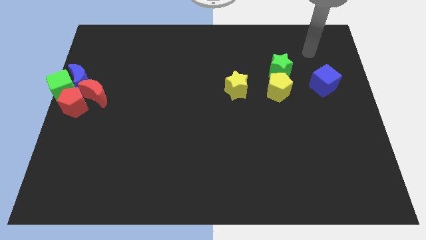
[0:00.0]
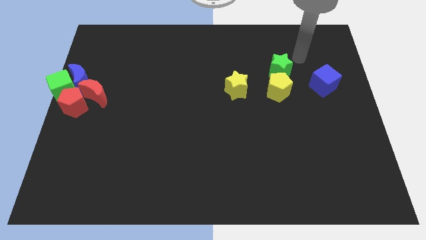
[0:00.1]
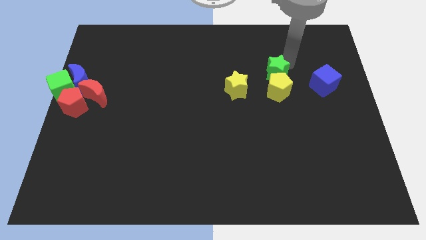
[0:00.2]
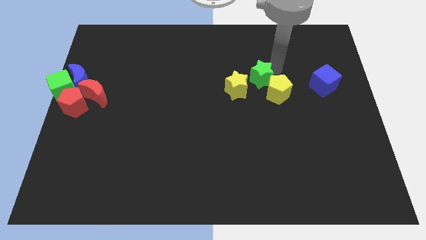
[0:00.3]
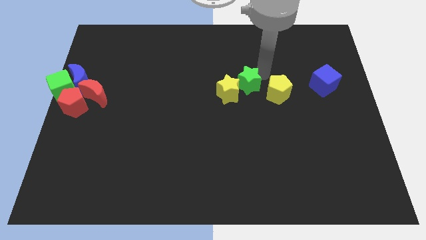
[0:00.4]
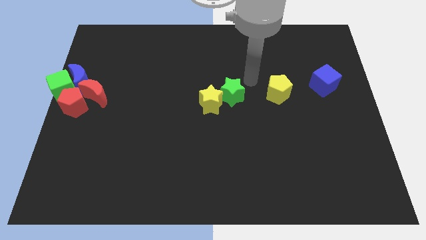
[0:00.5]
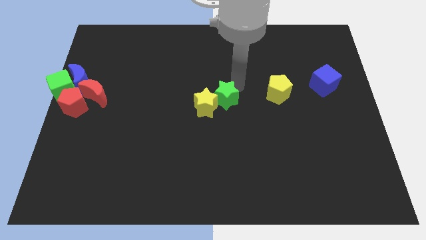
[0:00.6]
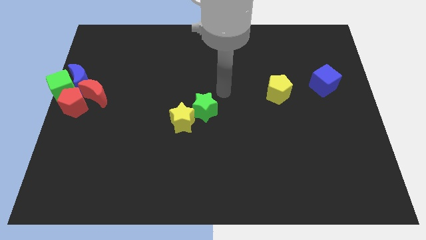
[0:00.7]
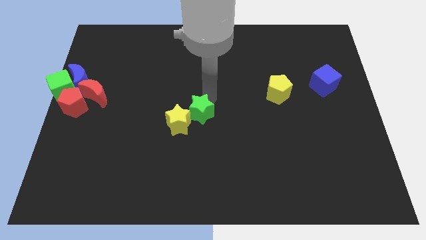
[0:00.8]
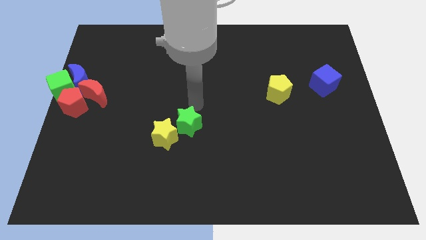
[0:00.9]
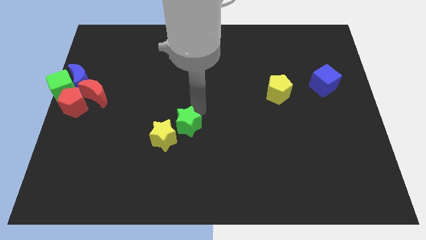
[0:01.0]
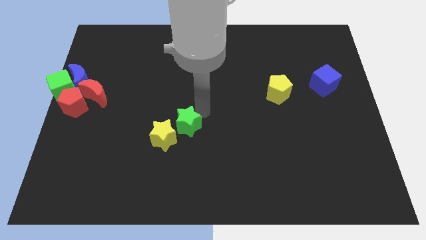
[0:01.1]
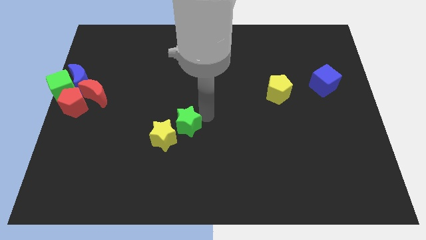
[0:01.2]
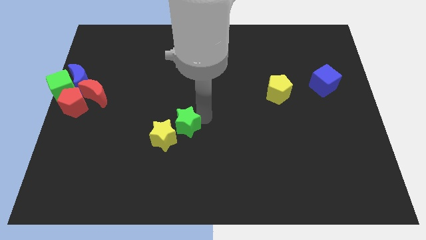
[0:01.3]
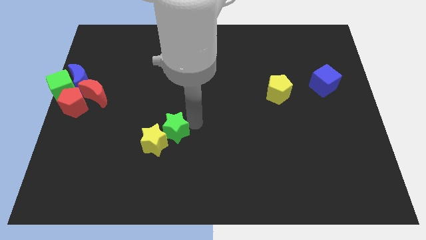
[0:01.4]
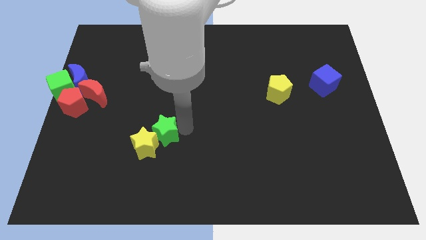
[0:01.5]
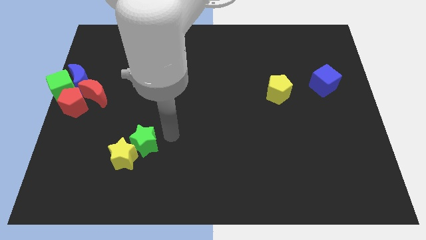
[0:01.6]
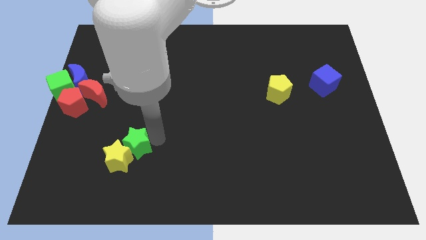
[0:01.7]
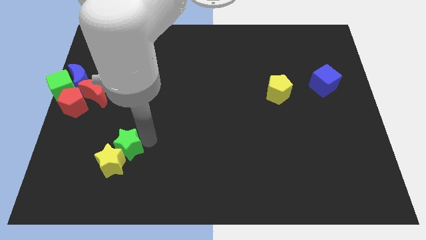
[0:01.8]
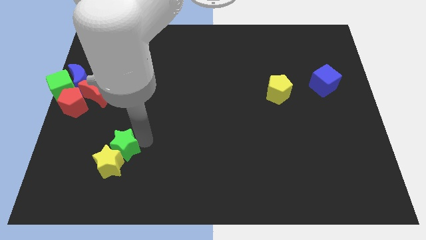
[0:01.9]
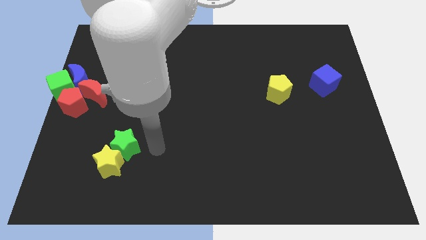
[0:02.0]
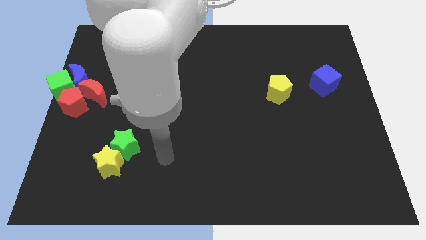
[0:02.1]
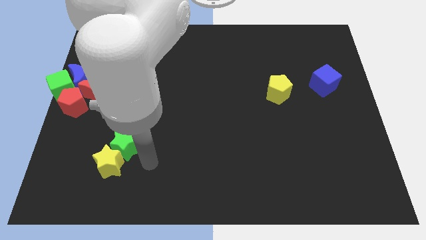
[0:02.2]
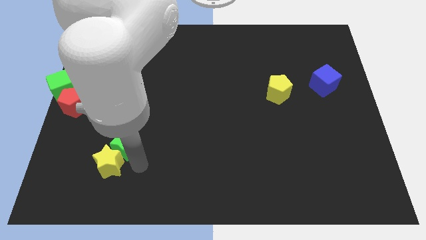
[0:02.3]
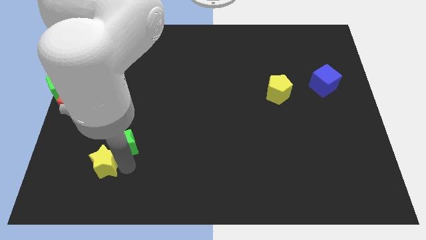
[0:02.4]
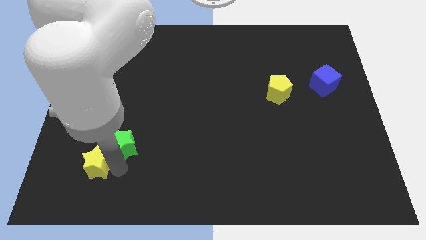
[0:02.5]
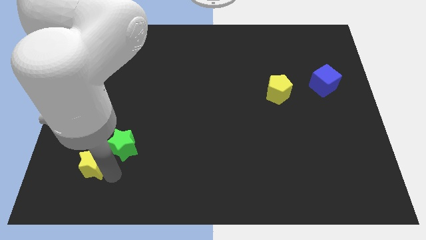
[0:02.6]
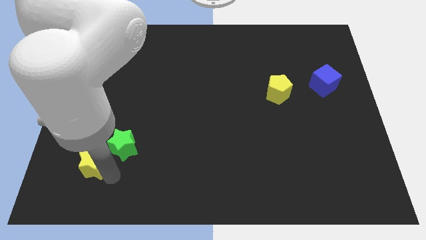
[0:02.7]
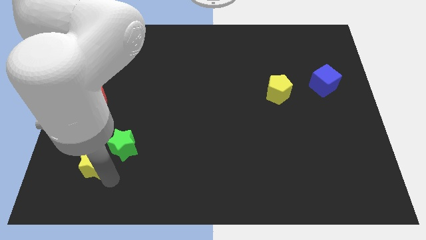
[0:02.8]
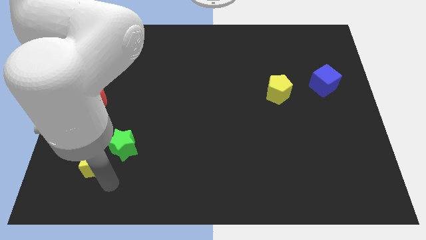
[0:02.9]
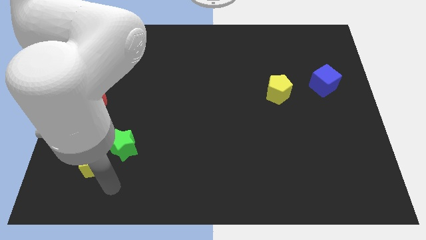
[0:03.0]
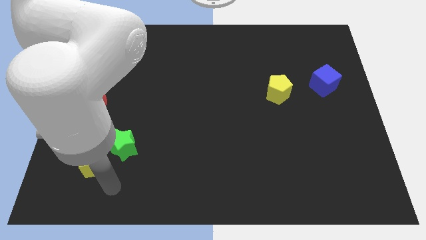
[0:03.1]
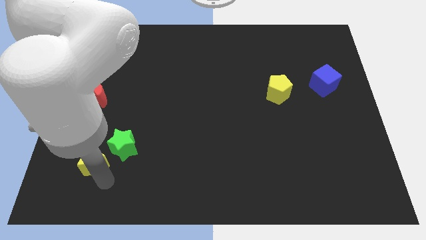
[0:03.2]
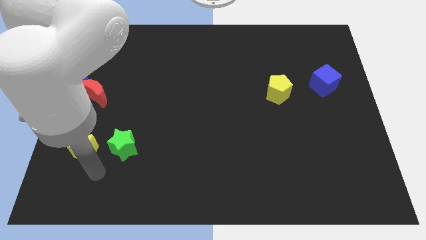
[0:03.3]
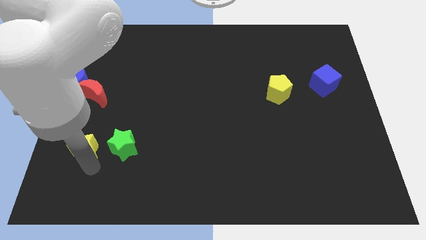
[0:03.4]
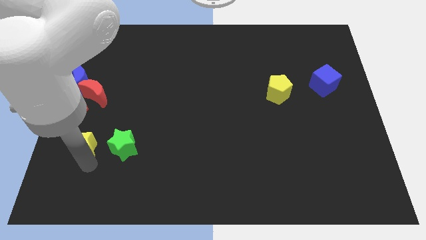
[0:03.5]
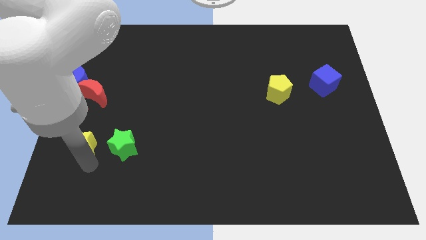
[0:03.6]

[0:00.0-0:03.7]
move the stars to the left bottom

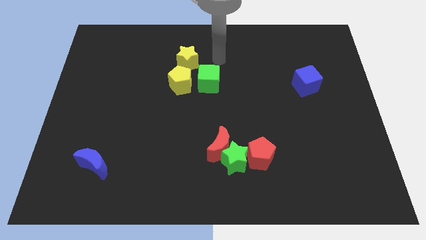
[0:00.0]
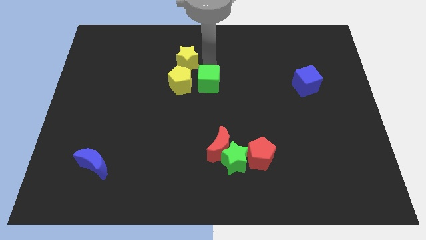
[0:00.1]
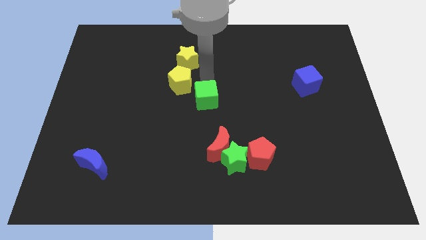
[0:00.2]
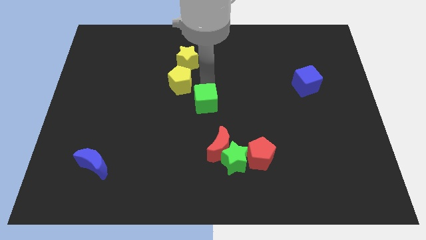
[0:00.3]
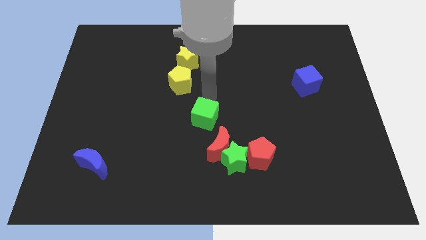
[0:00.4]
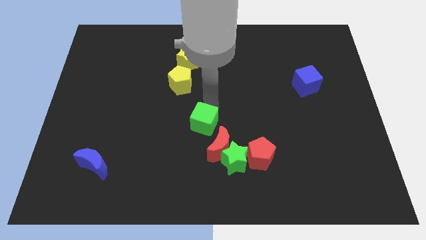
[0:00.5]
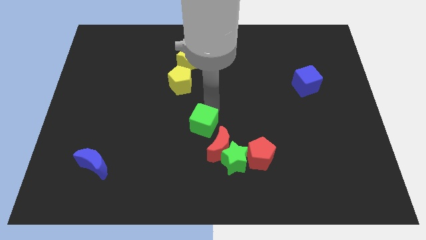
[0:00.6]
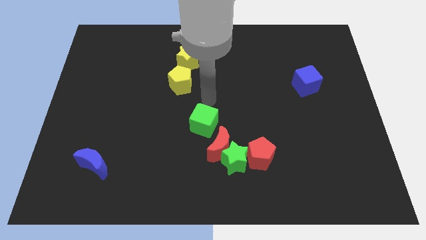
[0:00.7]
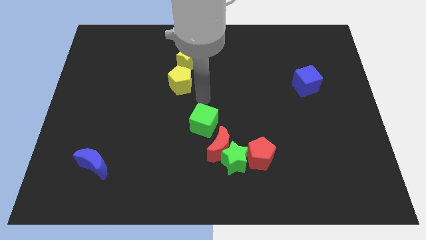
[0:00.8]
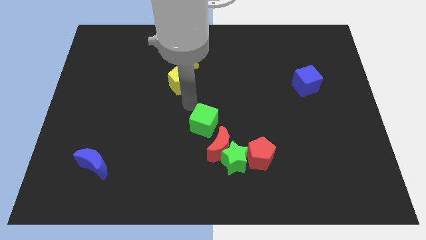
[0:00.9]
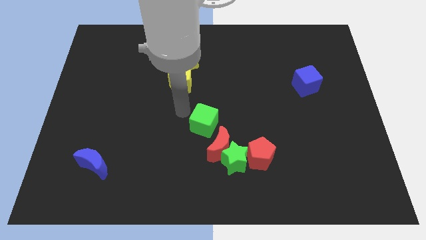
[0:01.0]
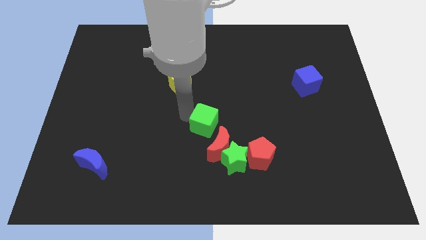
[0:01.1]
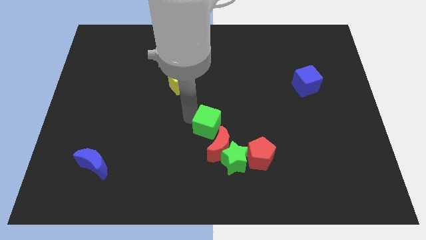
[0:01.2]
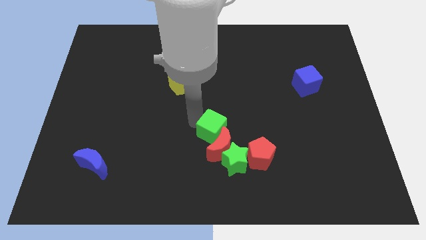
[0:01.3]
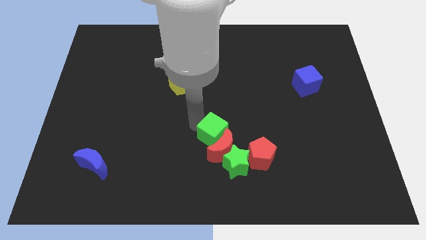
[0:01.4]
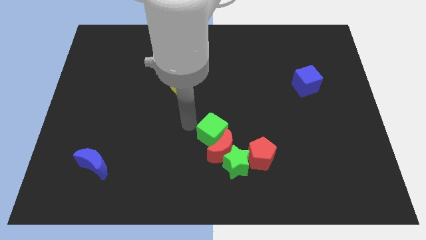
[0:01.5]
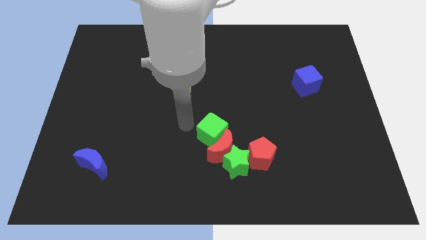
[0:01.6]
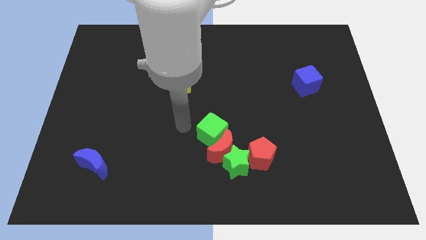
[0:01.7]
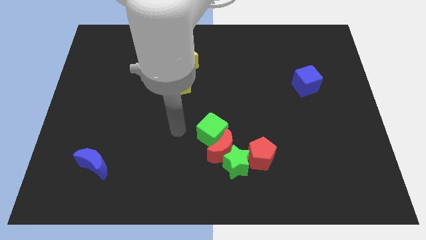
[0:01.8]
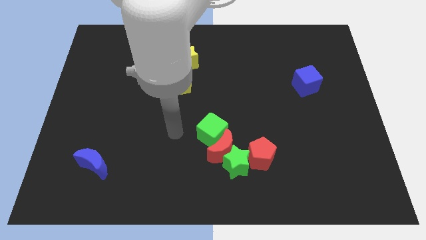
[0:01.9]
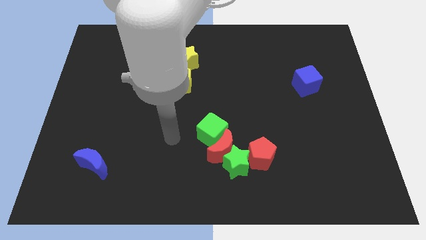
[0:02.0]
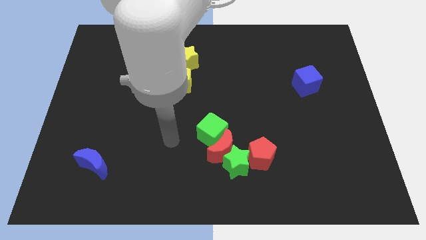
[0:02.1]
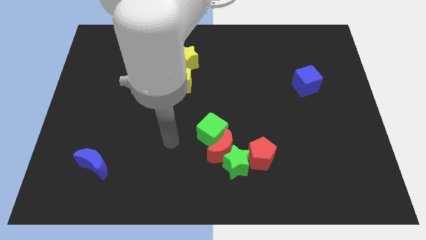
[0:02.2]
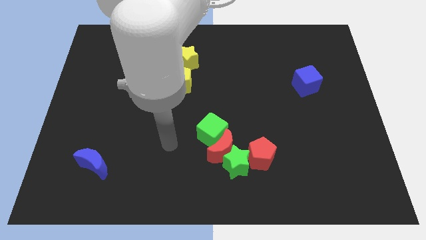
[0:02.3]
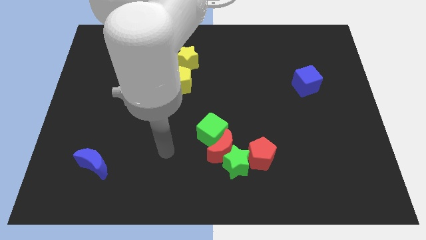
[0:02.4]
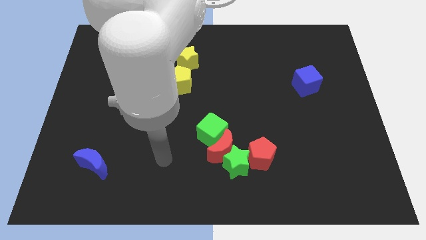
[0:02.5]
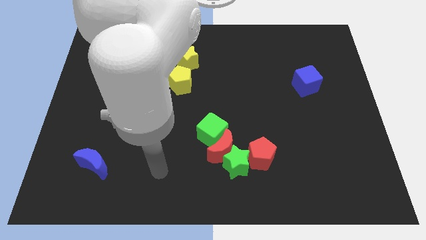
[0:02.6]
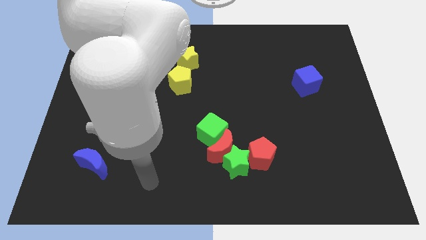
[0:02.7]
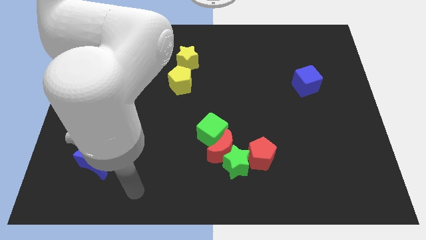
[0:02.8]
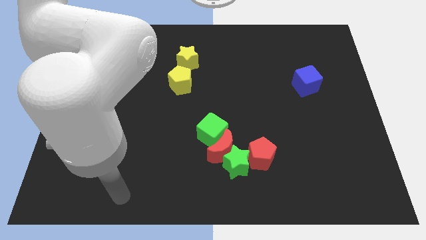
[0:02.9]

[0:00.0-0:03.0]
slide the green cube into the red crescent

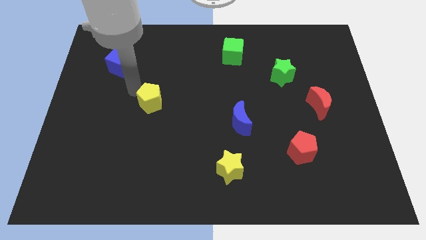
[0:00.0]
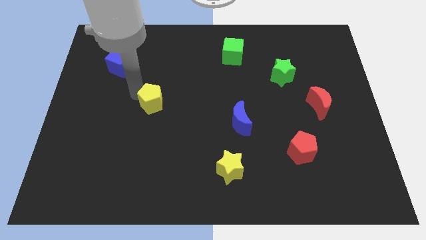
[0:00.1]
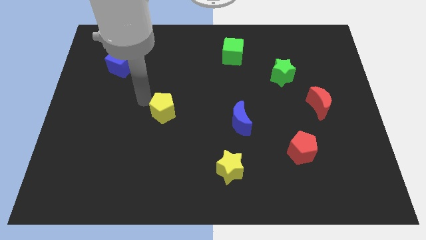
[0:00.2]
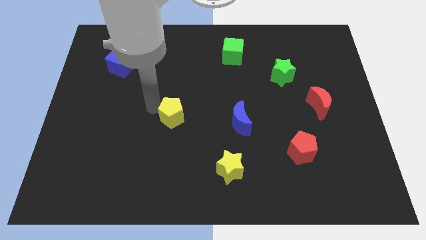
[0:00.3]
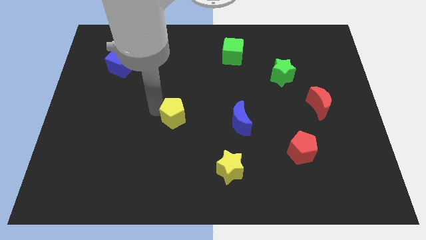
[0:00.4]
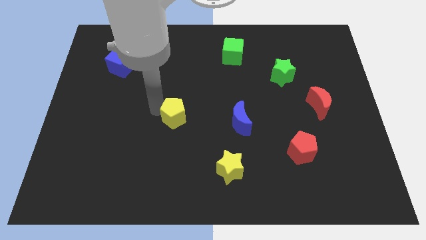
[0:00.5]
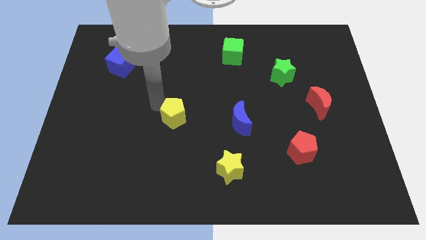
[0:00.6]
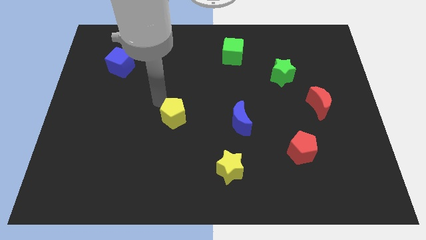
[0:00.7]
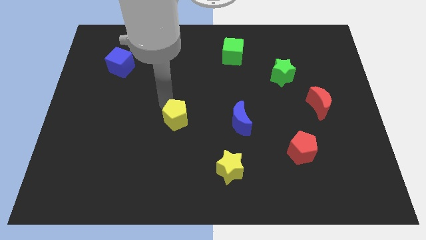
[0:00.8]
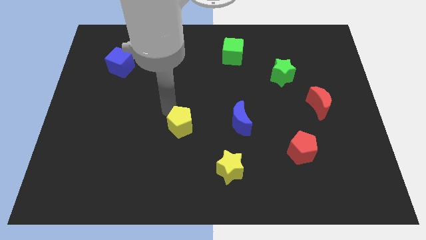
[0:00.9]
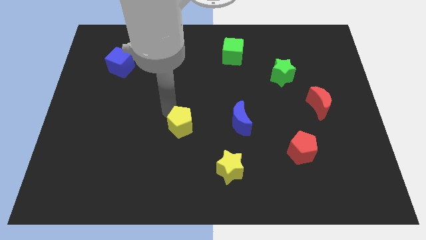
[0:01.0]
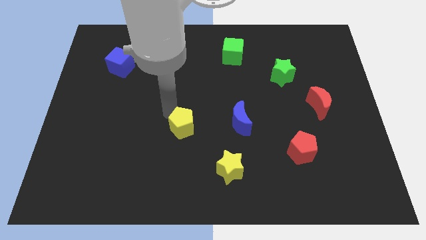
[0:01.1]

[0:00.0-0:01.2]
move the yellow pentagon left to the blue crescent

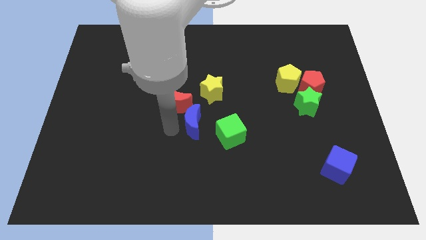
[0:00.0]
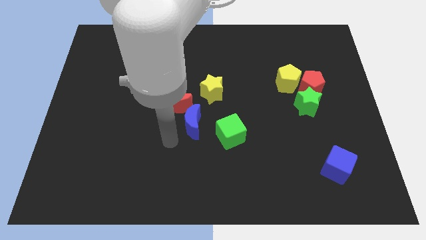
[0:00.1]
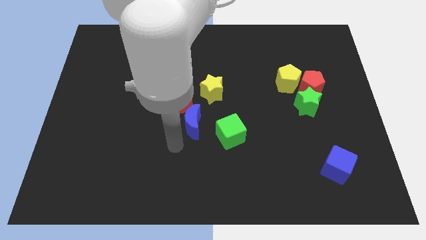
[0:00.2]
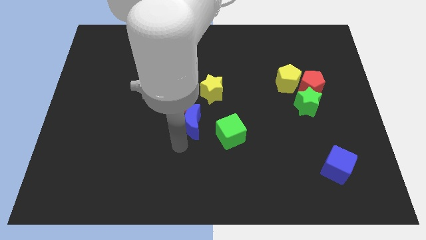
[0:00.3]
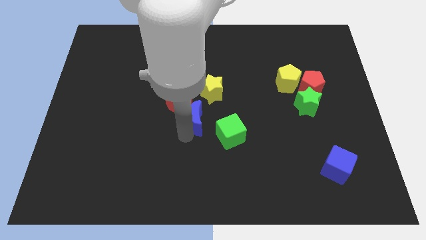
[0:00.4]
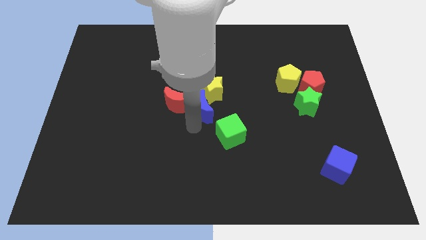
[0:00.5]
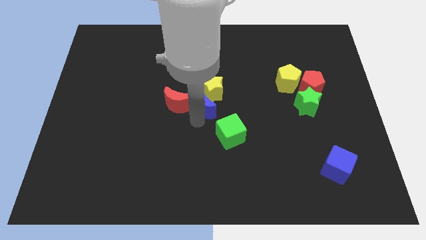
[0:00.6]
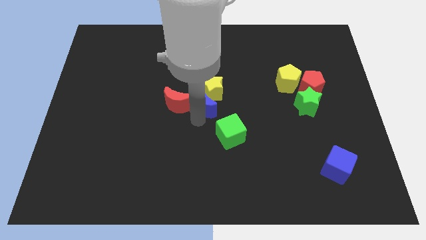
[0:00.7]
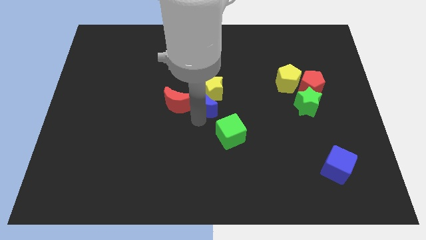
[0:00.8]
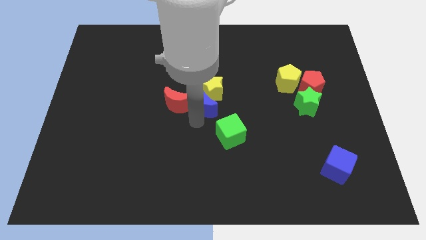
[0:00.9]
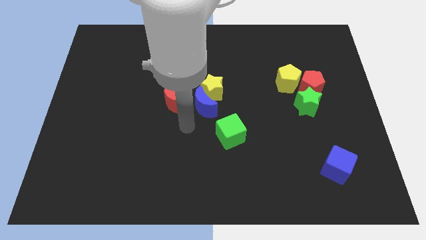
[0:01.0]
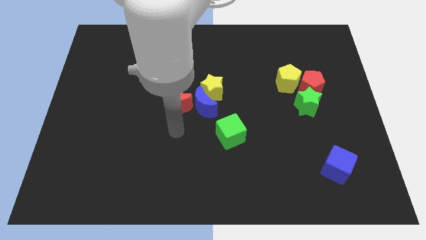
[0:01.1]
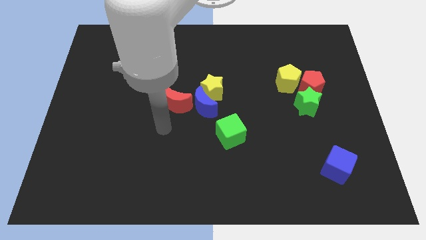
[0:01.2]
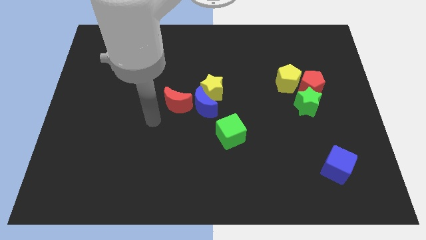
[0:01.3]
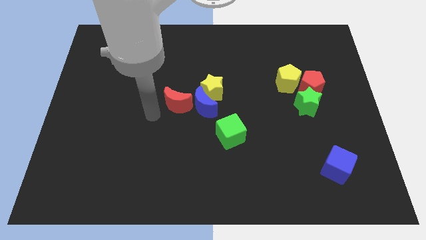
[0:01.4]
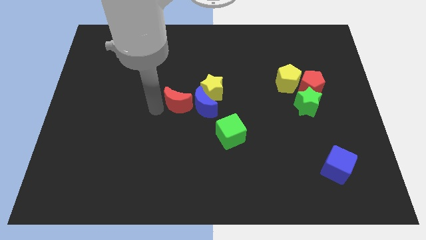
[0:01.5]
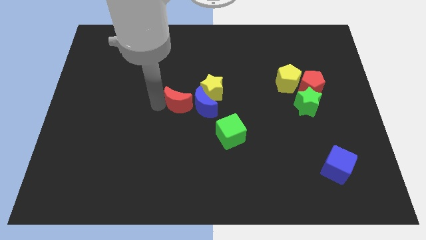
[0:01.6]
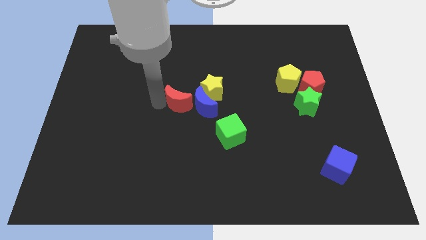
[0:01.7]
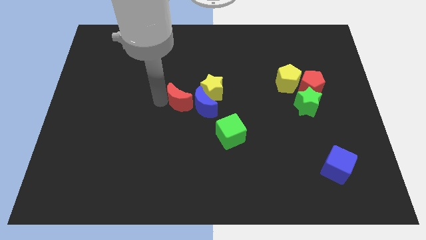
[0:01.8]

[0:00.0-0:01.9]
put the blue moon at the bottom left of the yellow star
